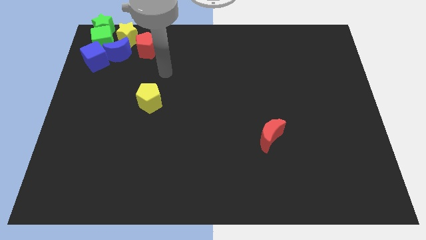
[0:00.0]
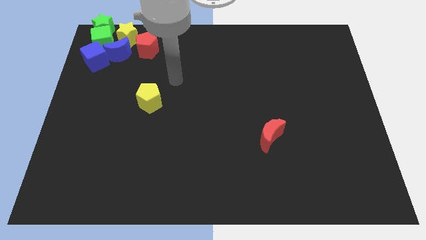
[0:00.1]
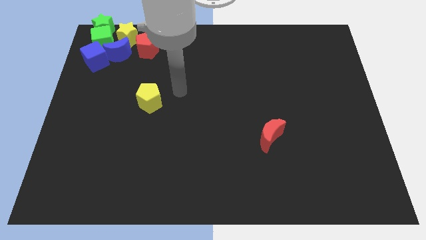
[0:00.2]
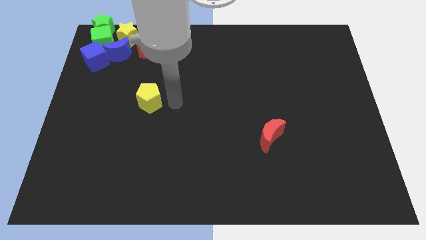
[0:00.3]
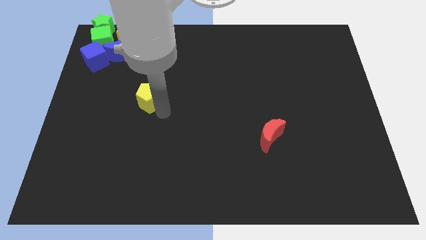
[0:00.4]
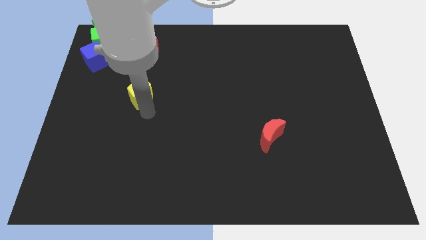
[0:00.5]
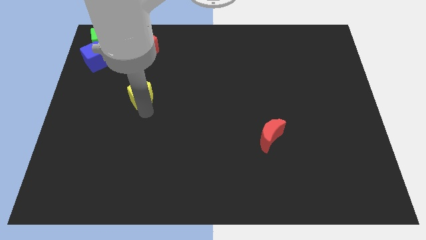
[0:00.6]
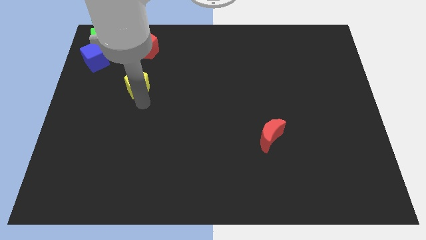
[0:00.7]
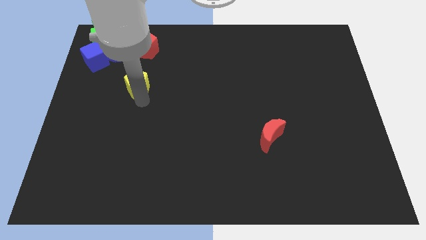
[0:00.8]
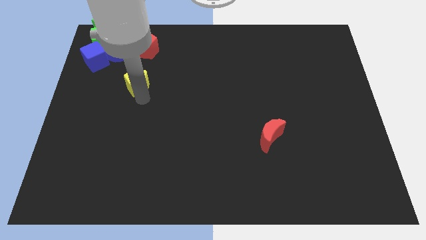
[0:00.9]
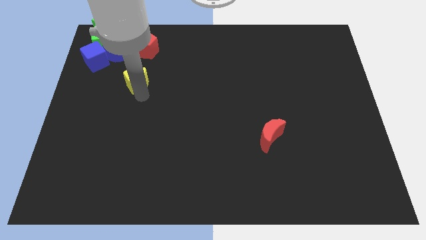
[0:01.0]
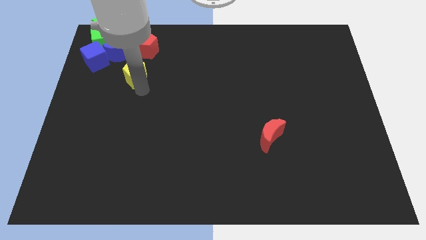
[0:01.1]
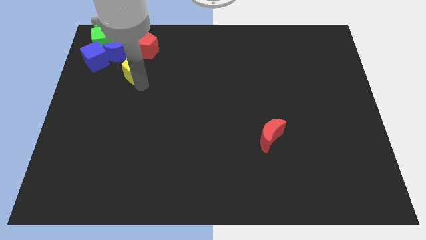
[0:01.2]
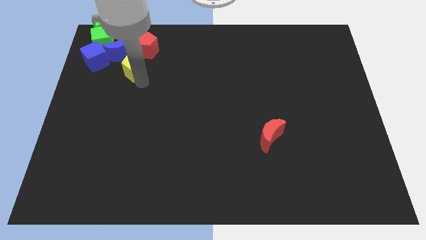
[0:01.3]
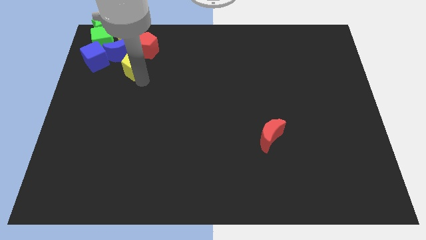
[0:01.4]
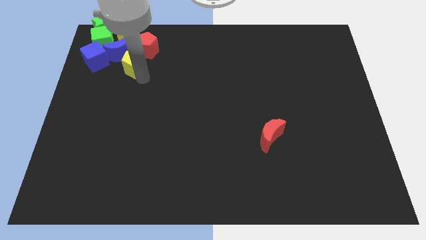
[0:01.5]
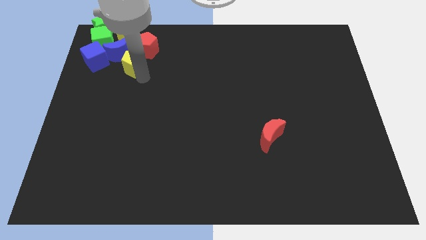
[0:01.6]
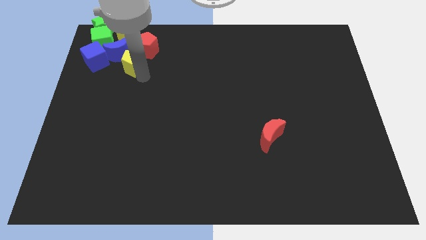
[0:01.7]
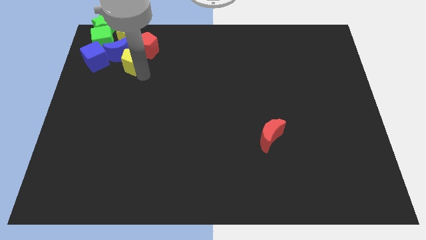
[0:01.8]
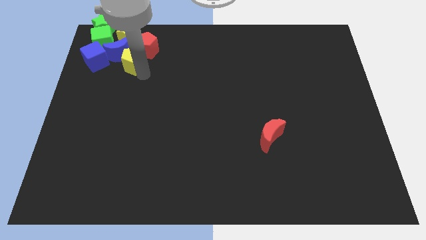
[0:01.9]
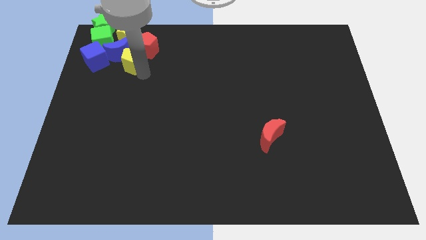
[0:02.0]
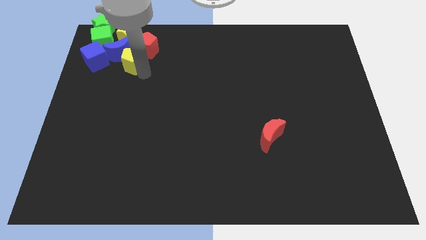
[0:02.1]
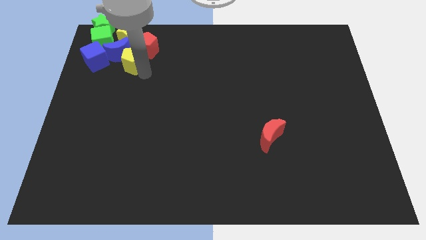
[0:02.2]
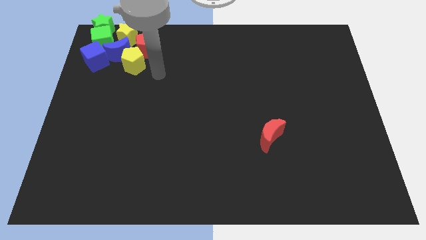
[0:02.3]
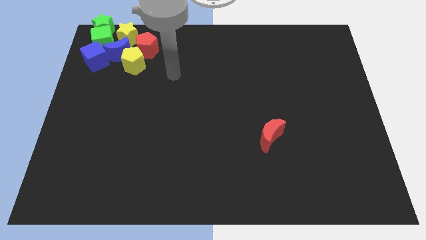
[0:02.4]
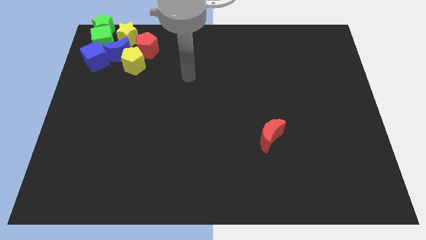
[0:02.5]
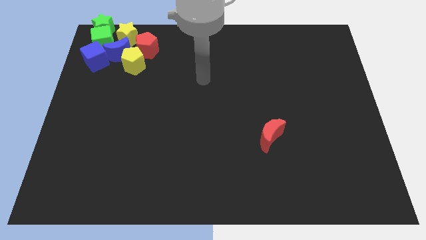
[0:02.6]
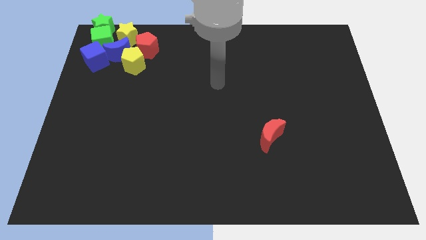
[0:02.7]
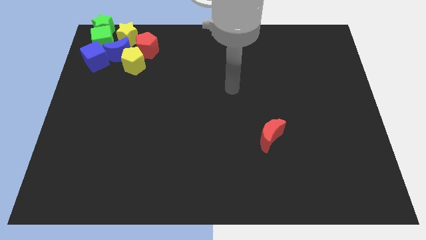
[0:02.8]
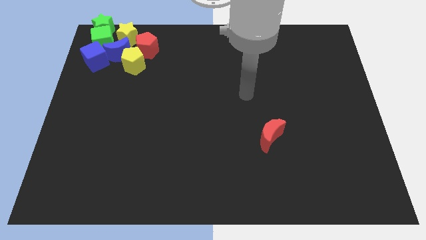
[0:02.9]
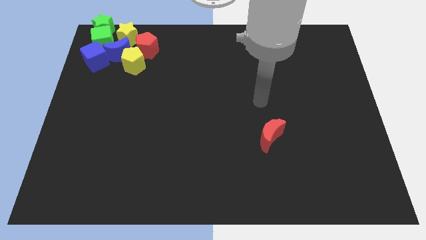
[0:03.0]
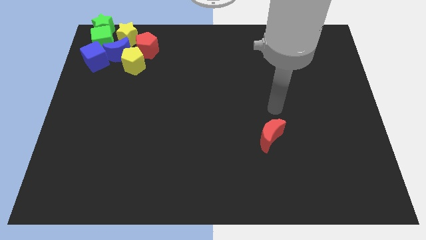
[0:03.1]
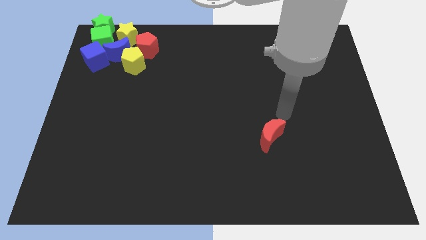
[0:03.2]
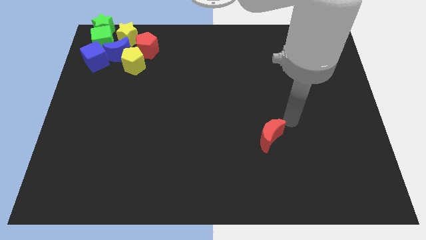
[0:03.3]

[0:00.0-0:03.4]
move the yellow pentagon into a group of blocks

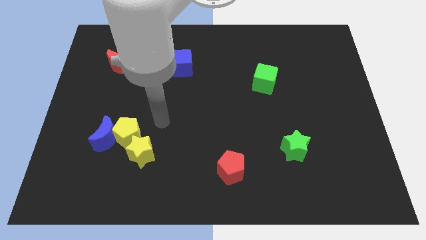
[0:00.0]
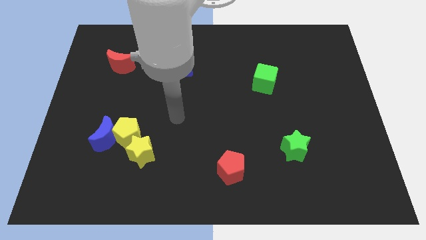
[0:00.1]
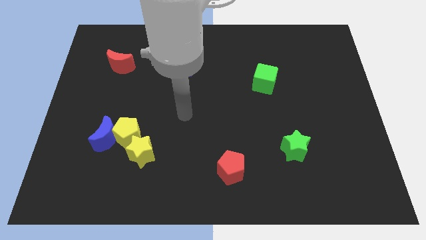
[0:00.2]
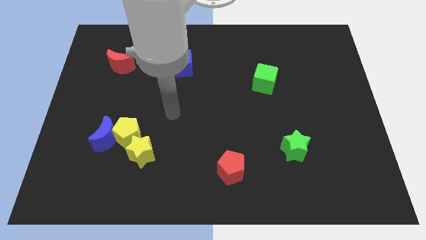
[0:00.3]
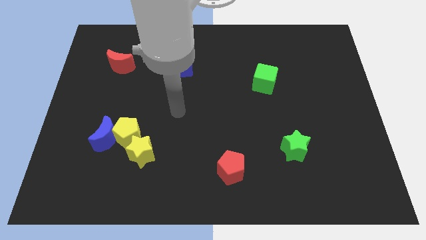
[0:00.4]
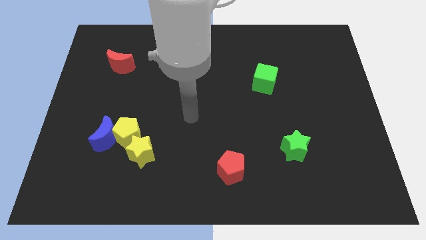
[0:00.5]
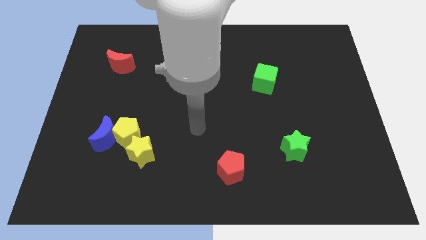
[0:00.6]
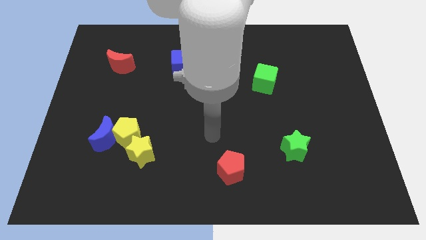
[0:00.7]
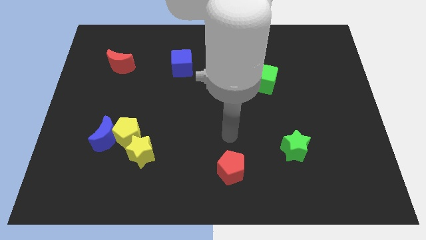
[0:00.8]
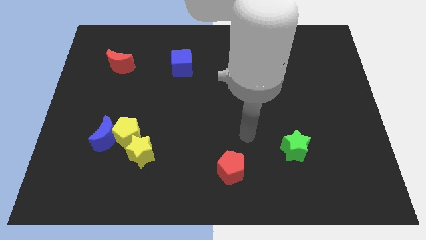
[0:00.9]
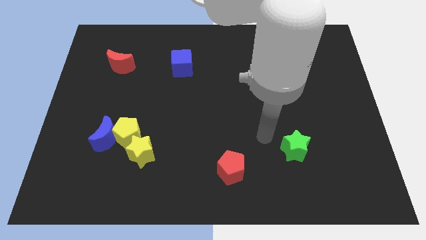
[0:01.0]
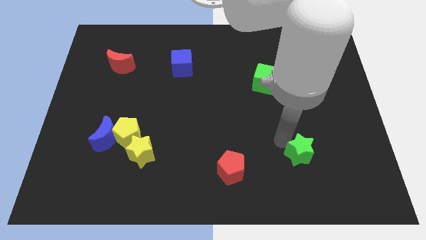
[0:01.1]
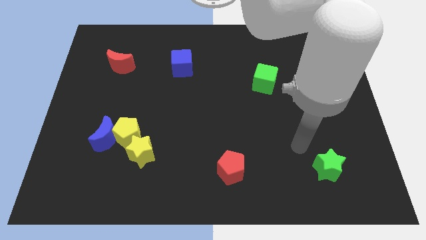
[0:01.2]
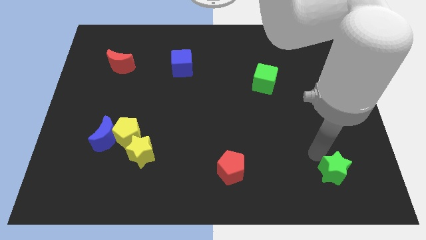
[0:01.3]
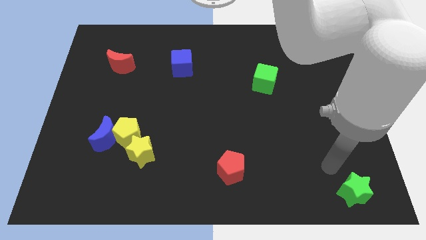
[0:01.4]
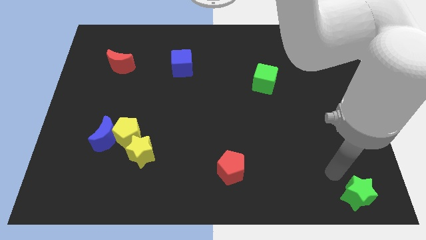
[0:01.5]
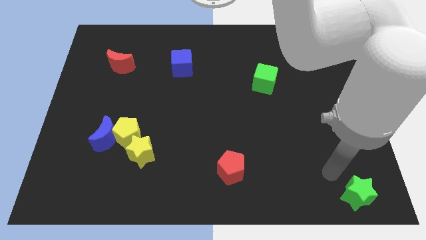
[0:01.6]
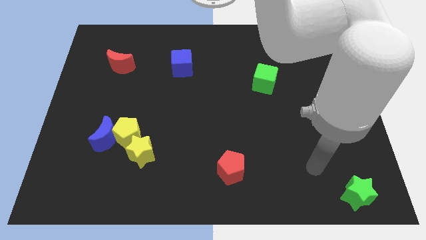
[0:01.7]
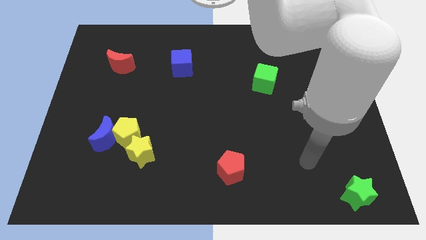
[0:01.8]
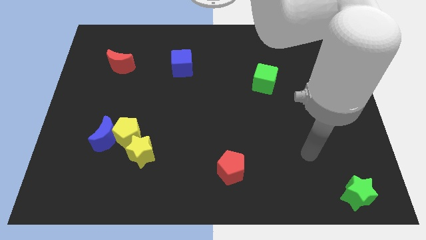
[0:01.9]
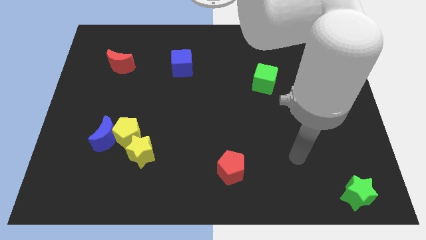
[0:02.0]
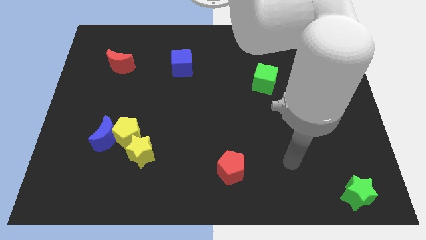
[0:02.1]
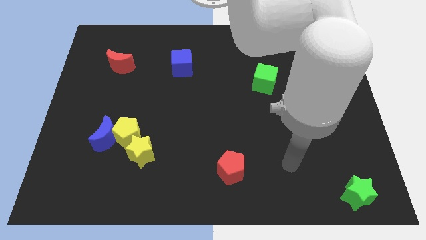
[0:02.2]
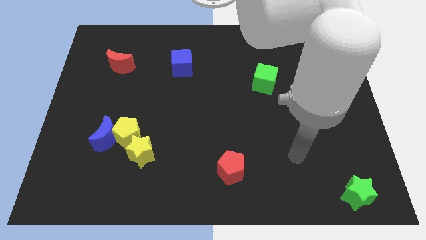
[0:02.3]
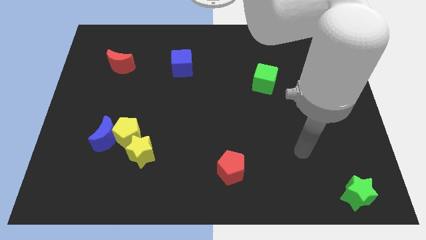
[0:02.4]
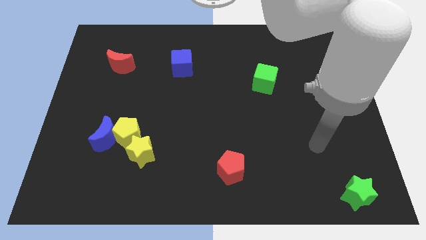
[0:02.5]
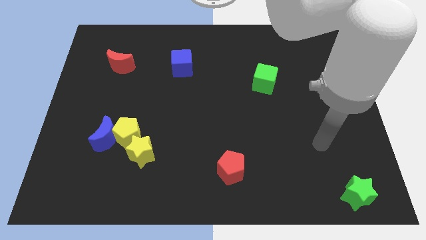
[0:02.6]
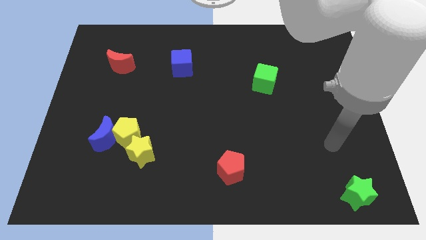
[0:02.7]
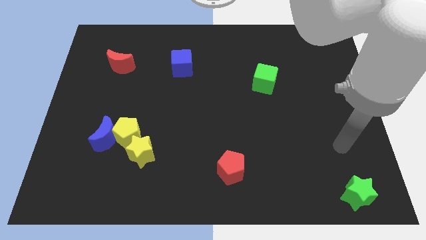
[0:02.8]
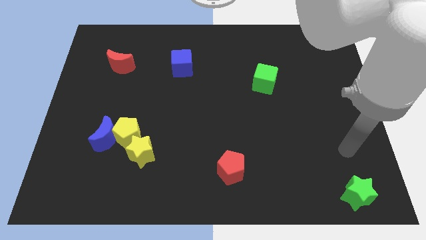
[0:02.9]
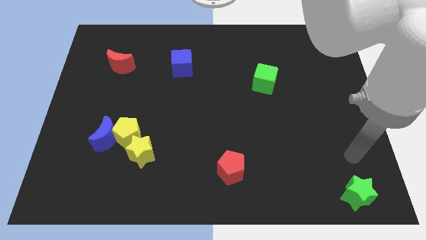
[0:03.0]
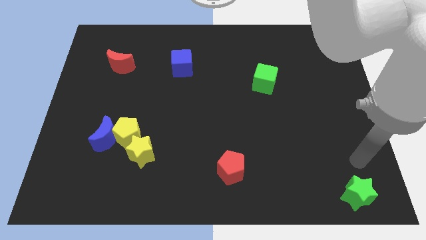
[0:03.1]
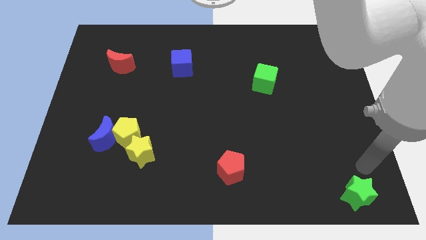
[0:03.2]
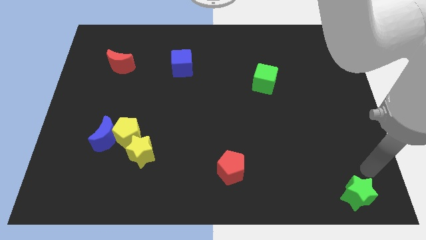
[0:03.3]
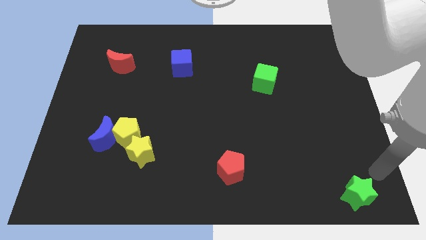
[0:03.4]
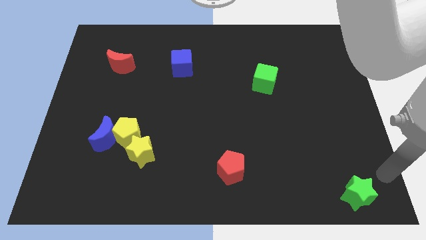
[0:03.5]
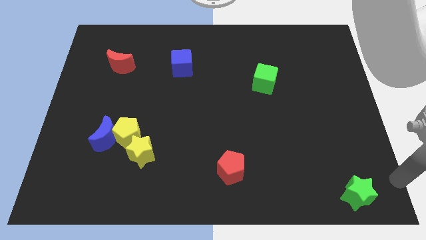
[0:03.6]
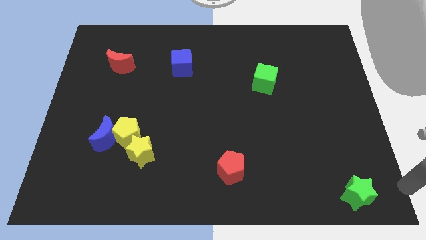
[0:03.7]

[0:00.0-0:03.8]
push the green star towards the bottom right corner of the board

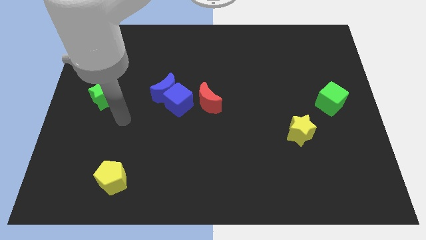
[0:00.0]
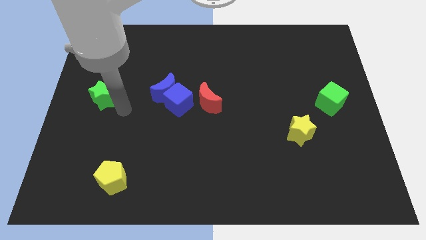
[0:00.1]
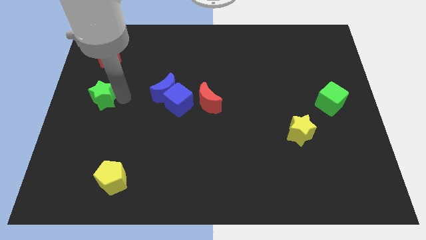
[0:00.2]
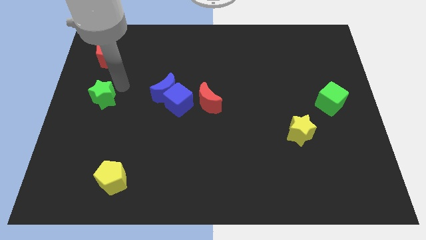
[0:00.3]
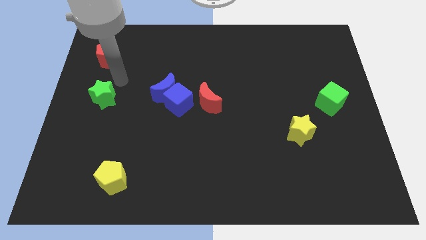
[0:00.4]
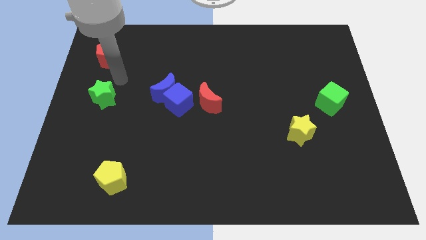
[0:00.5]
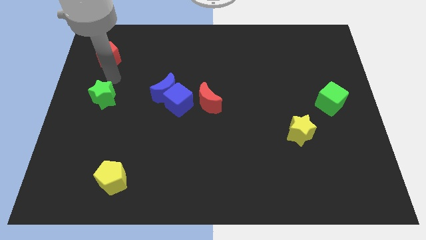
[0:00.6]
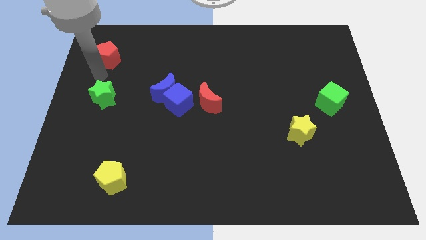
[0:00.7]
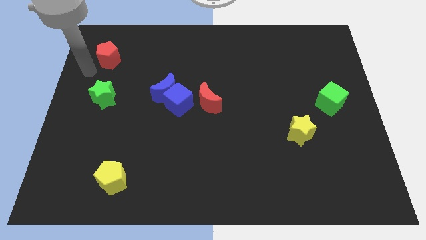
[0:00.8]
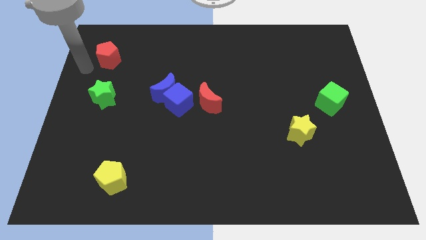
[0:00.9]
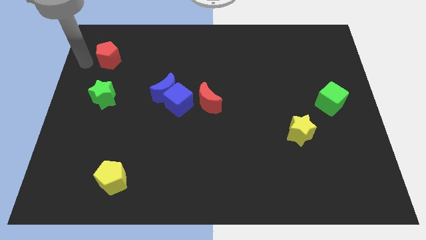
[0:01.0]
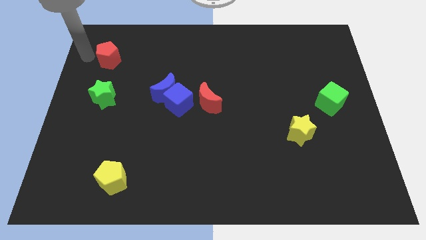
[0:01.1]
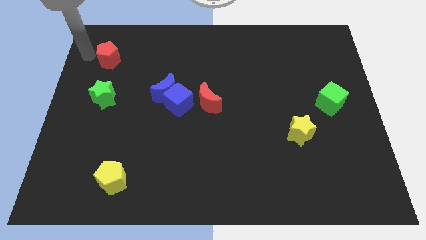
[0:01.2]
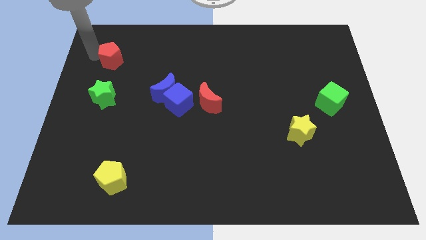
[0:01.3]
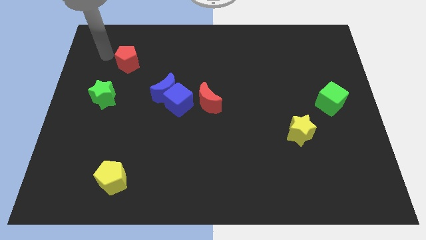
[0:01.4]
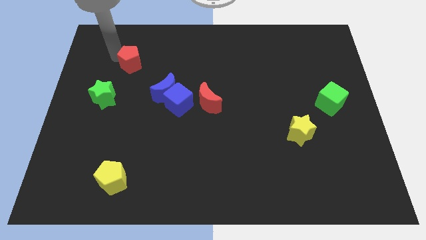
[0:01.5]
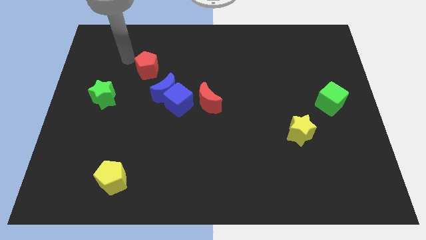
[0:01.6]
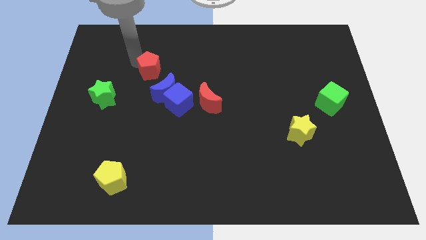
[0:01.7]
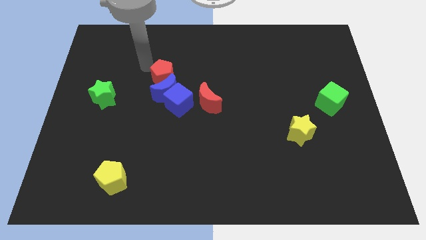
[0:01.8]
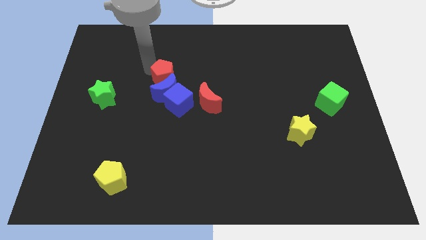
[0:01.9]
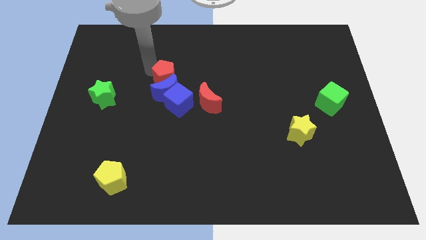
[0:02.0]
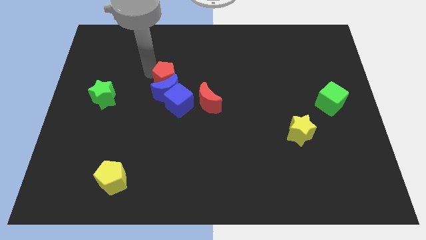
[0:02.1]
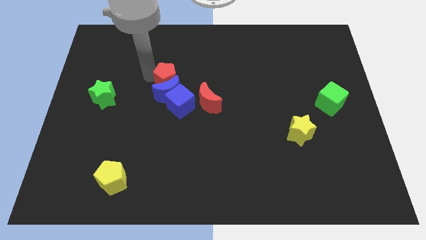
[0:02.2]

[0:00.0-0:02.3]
place the red pentagon into the blue crescent
